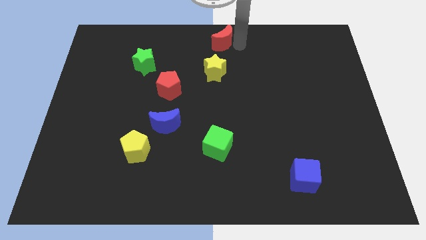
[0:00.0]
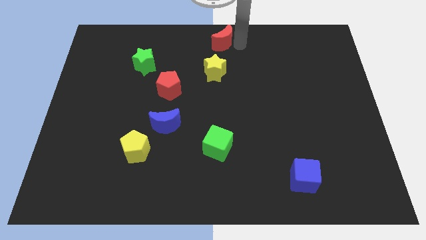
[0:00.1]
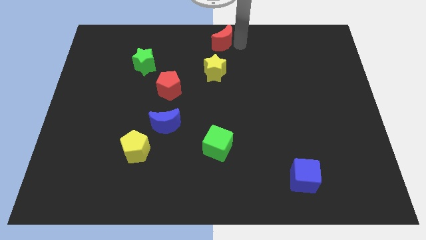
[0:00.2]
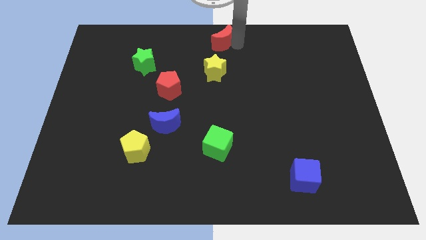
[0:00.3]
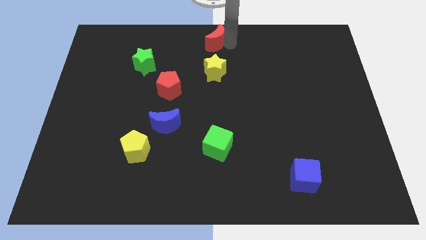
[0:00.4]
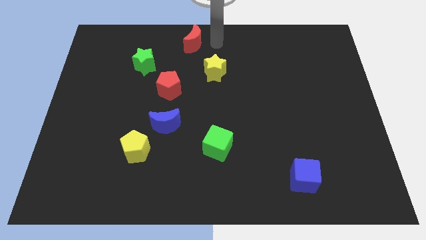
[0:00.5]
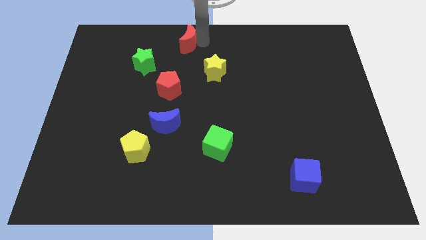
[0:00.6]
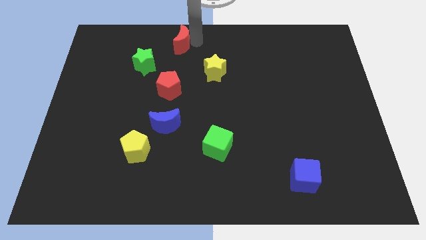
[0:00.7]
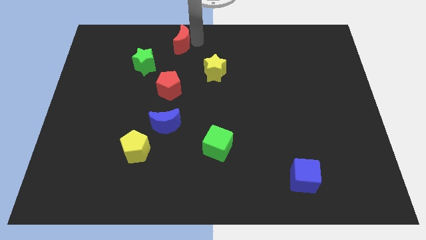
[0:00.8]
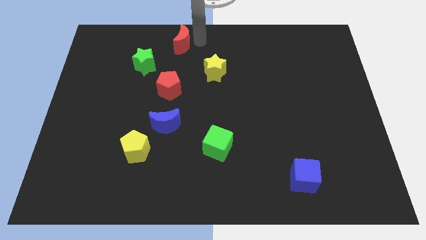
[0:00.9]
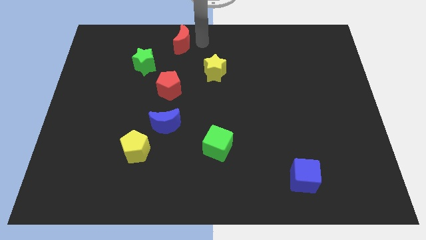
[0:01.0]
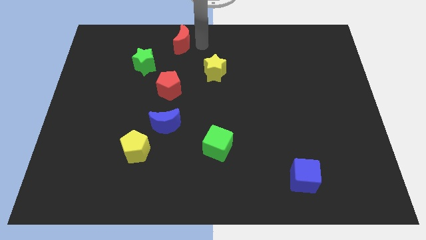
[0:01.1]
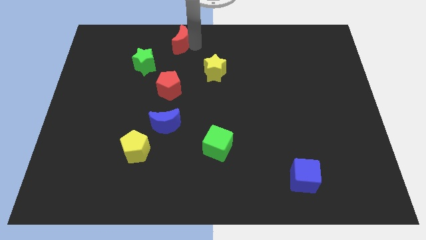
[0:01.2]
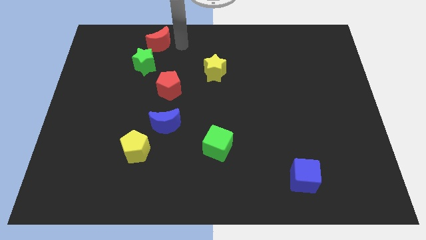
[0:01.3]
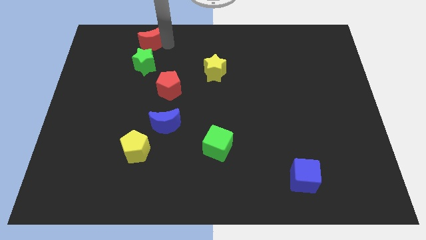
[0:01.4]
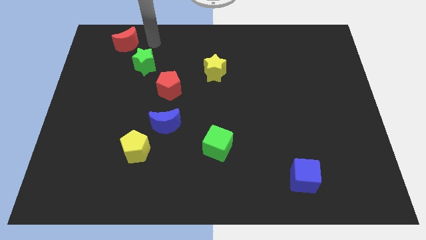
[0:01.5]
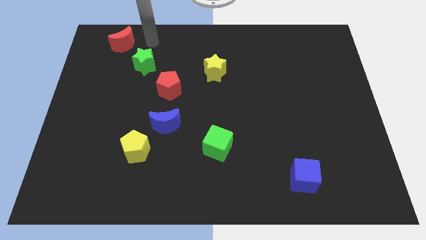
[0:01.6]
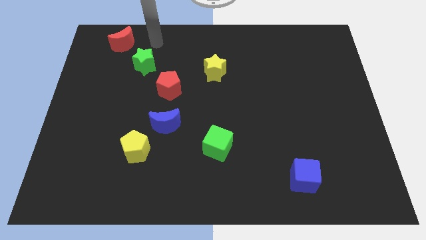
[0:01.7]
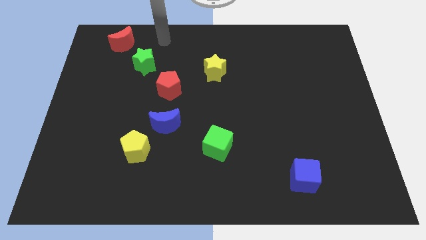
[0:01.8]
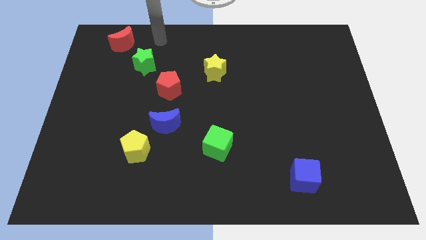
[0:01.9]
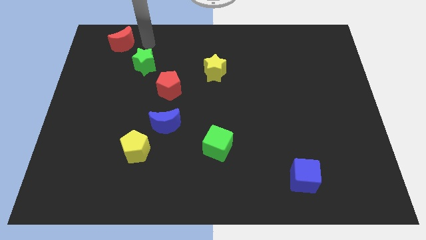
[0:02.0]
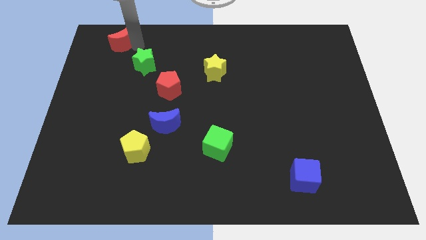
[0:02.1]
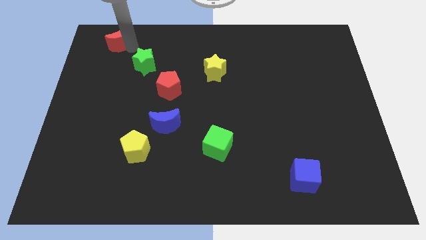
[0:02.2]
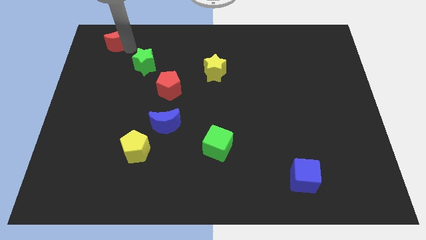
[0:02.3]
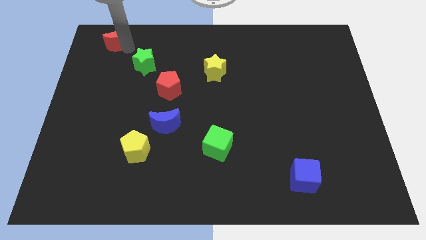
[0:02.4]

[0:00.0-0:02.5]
drag the red moon to the left side of the board

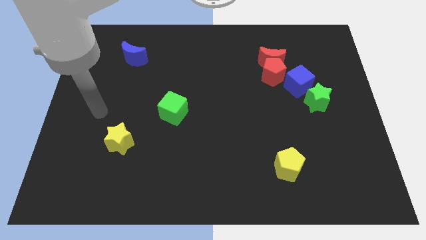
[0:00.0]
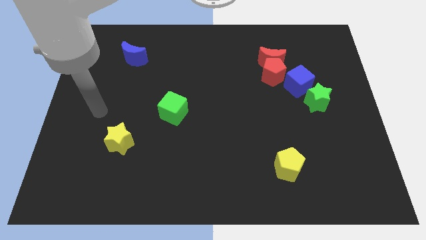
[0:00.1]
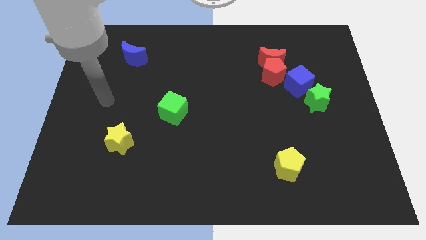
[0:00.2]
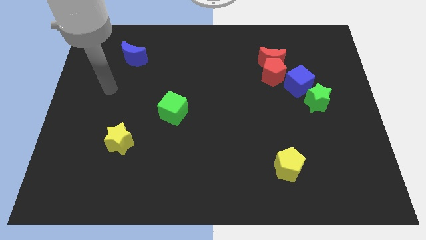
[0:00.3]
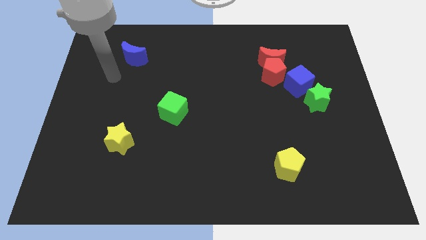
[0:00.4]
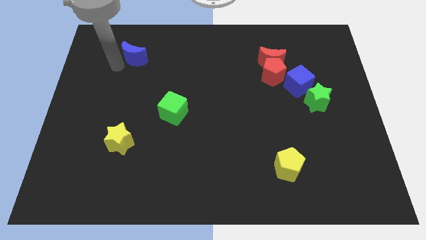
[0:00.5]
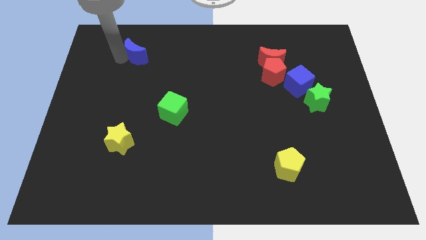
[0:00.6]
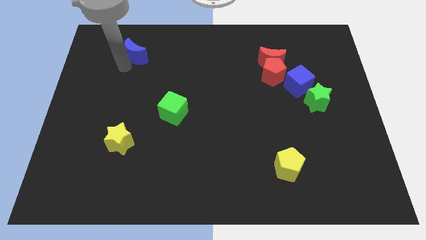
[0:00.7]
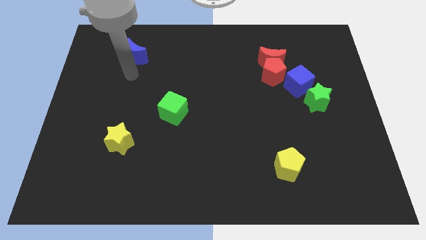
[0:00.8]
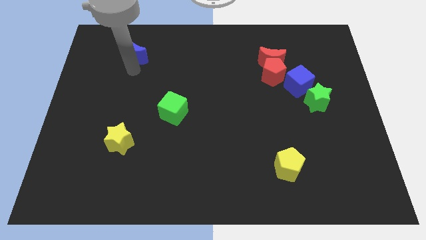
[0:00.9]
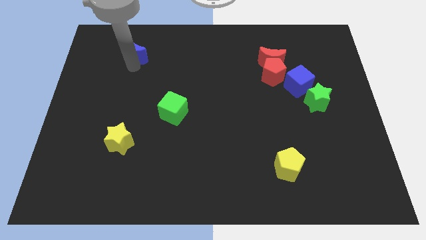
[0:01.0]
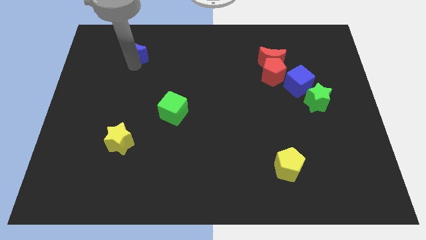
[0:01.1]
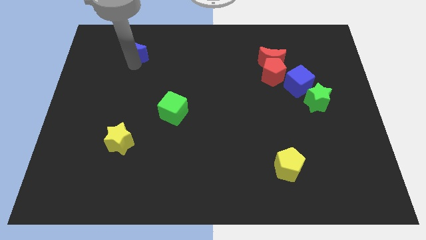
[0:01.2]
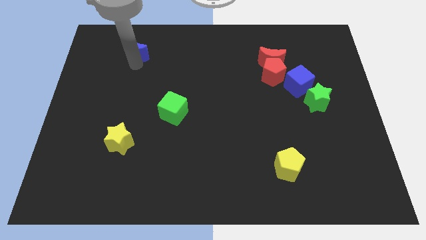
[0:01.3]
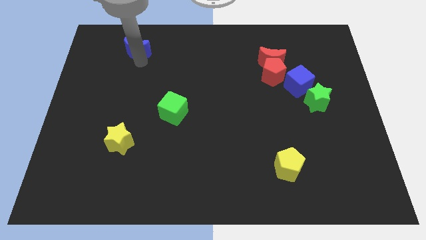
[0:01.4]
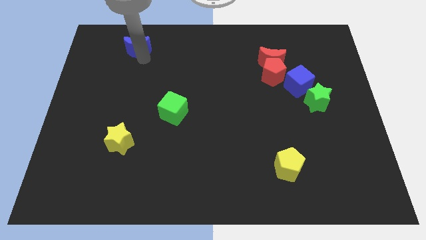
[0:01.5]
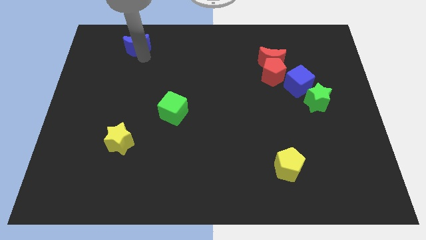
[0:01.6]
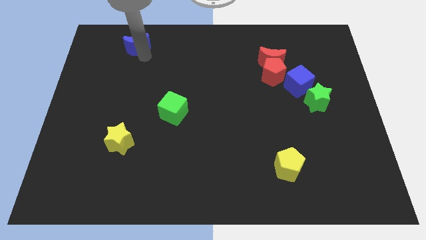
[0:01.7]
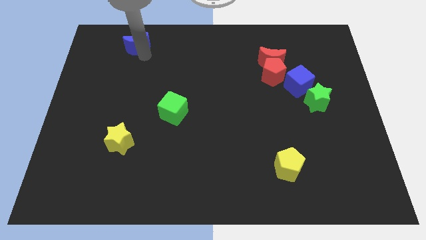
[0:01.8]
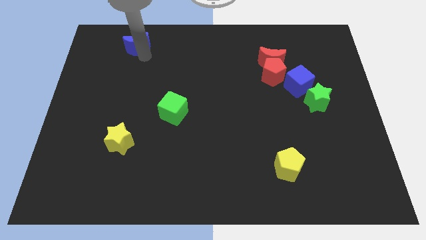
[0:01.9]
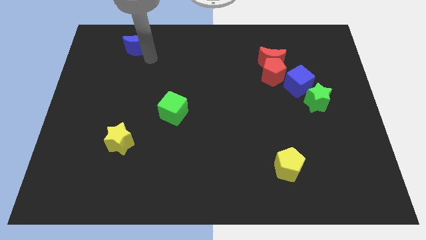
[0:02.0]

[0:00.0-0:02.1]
move the blue crescent slightly towards the top of the board

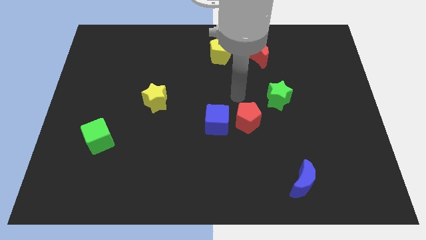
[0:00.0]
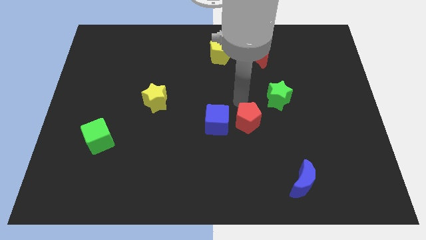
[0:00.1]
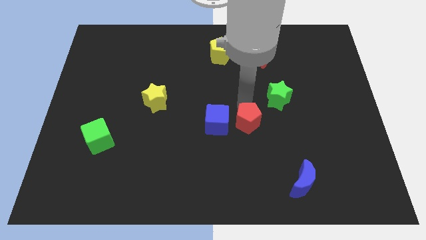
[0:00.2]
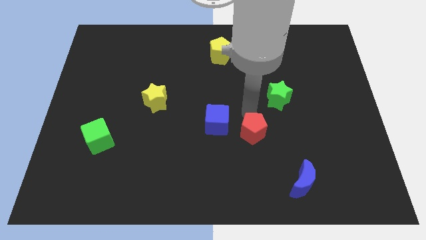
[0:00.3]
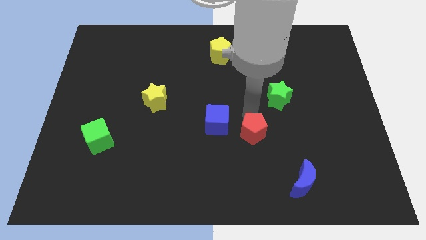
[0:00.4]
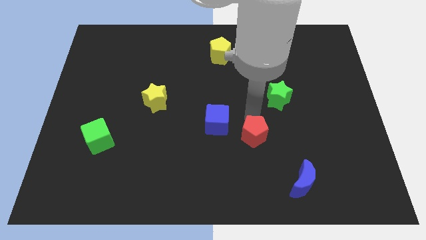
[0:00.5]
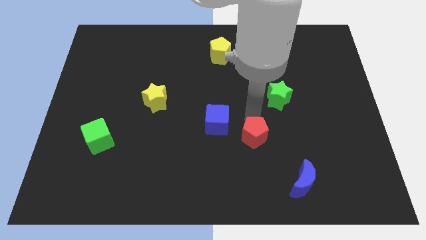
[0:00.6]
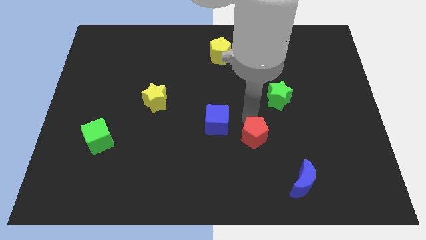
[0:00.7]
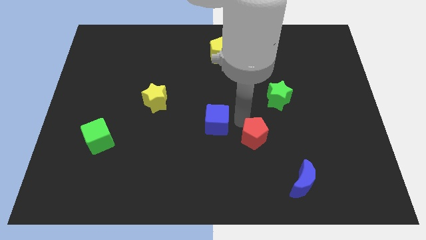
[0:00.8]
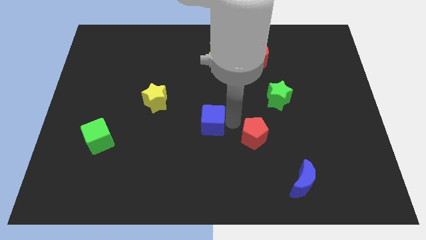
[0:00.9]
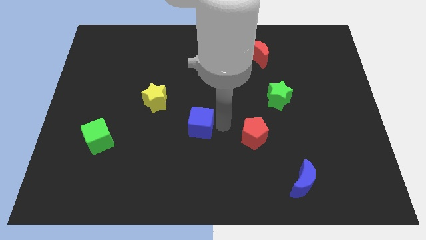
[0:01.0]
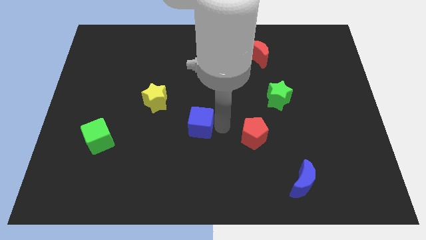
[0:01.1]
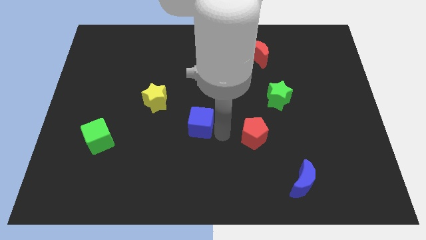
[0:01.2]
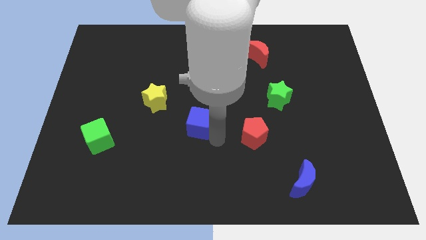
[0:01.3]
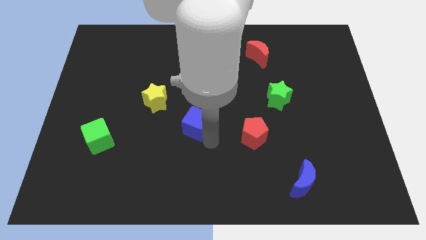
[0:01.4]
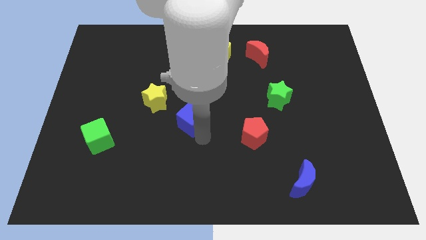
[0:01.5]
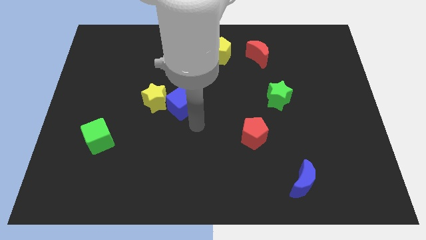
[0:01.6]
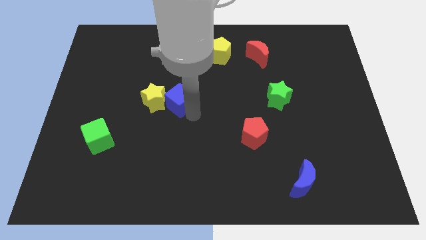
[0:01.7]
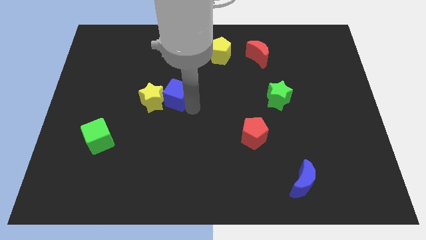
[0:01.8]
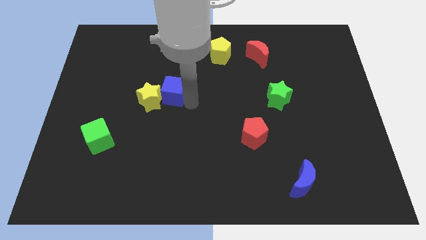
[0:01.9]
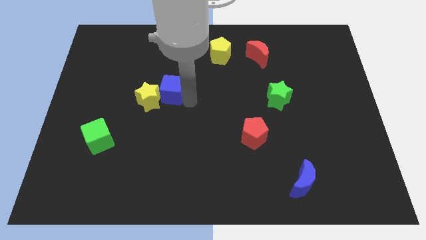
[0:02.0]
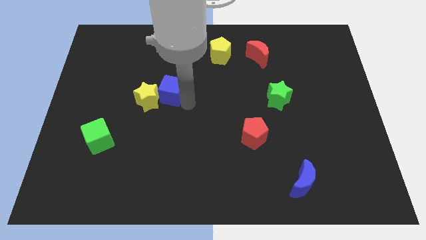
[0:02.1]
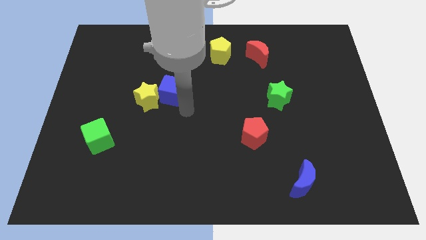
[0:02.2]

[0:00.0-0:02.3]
push the blue cube into yellow star

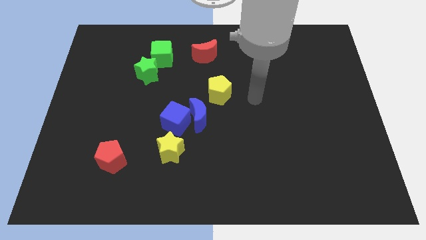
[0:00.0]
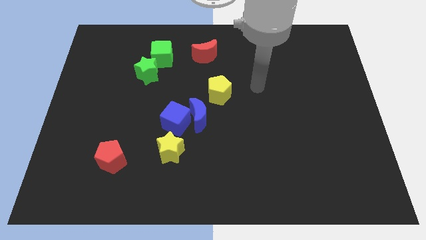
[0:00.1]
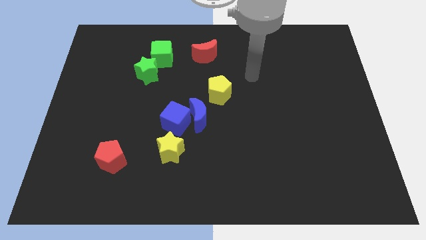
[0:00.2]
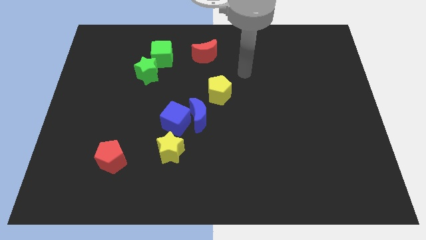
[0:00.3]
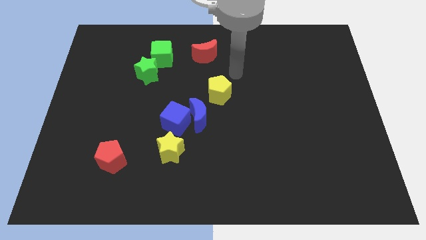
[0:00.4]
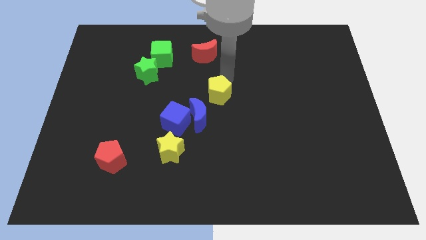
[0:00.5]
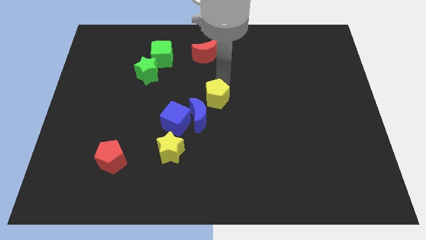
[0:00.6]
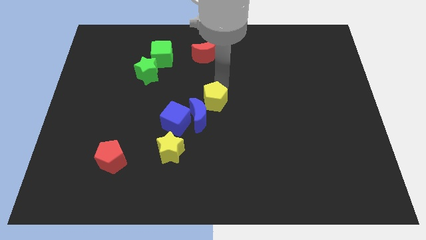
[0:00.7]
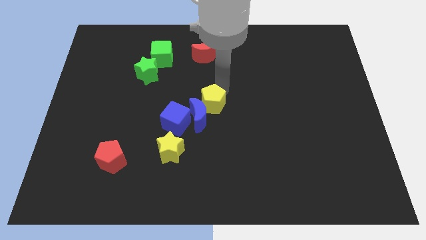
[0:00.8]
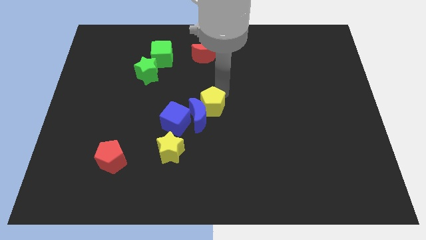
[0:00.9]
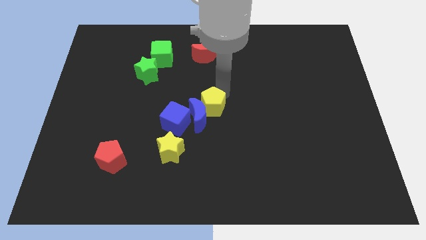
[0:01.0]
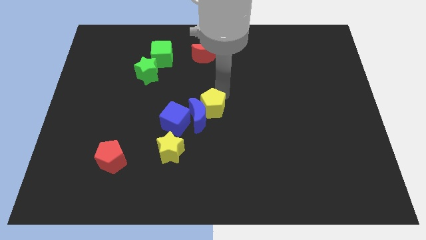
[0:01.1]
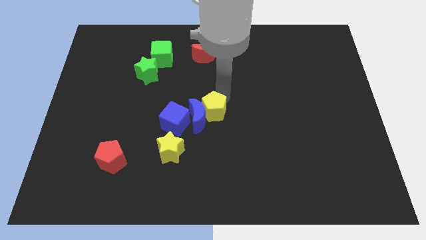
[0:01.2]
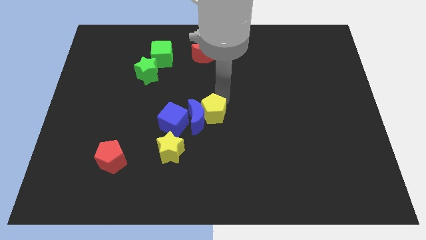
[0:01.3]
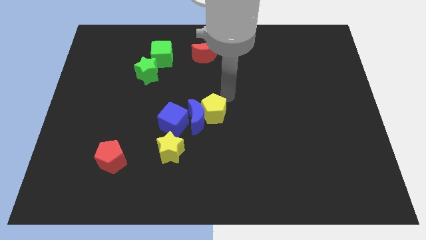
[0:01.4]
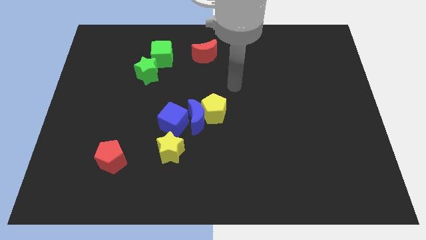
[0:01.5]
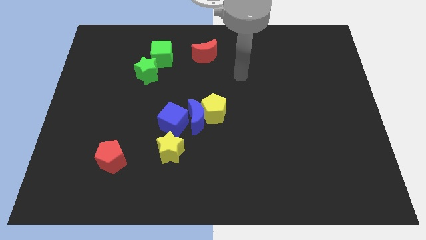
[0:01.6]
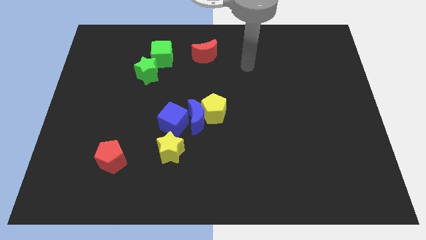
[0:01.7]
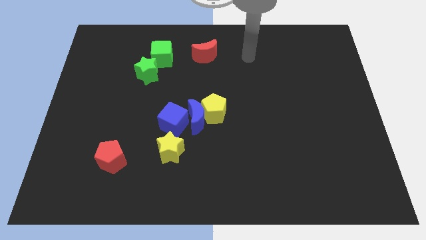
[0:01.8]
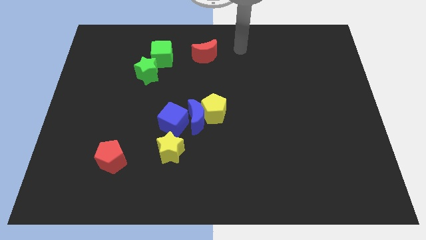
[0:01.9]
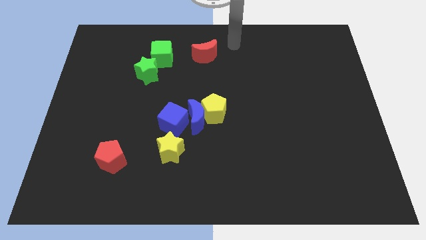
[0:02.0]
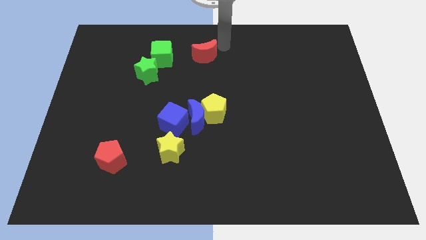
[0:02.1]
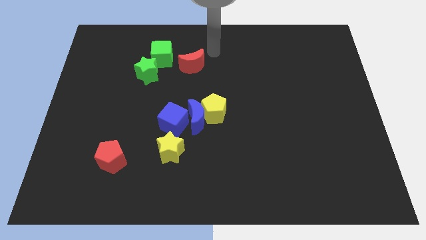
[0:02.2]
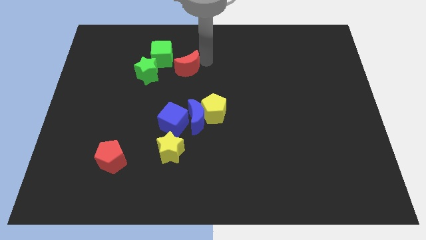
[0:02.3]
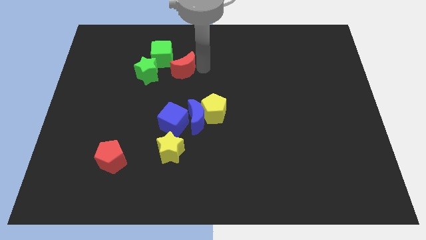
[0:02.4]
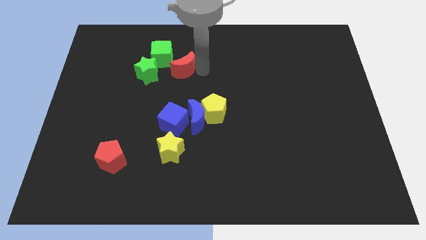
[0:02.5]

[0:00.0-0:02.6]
move yellow pentagon into blue moon
